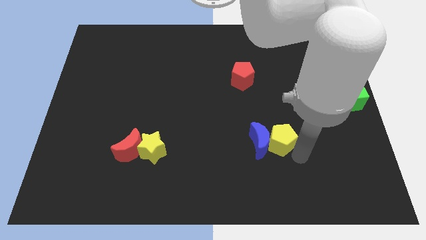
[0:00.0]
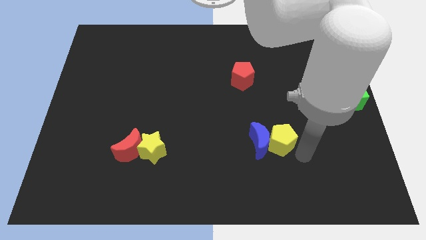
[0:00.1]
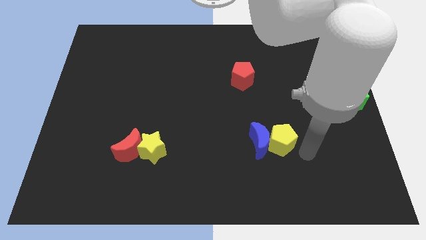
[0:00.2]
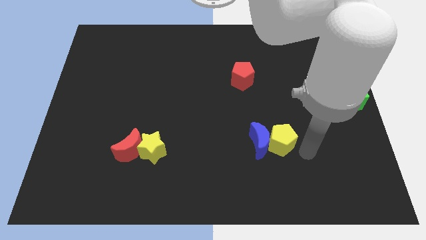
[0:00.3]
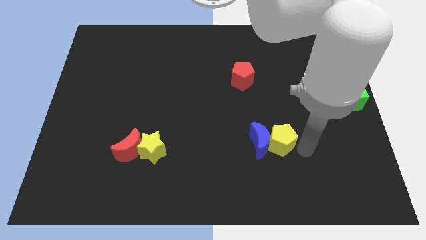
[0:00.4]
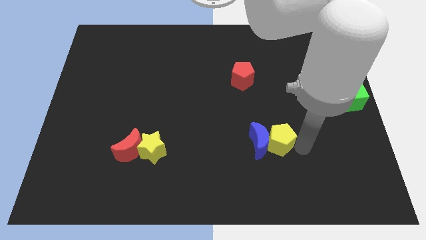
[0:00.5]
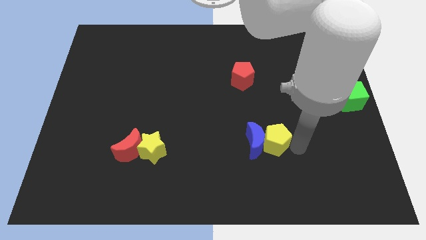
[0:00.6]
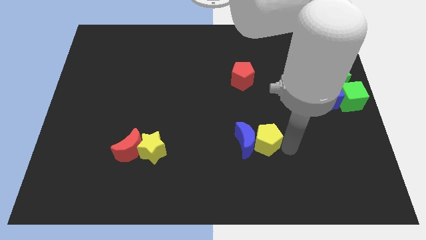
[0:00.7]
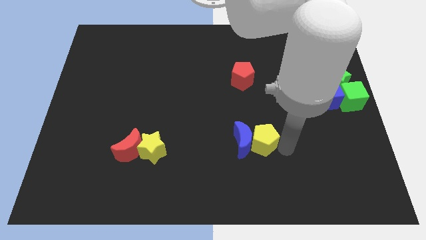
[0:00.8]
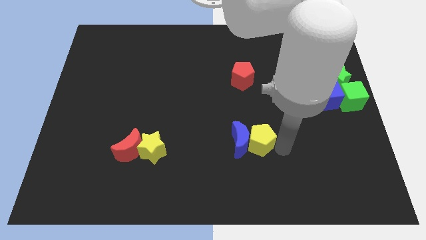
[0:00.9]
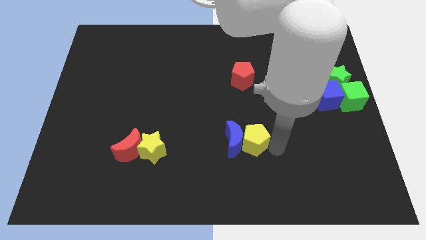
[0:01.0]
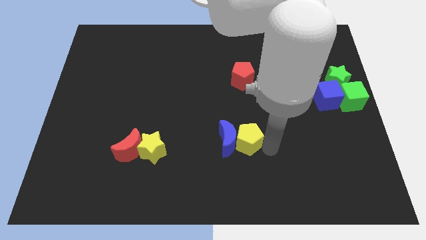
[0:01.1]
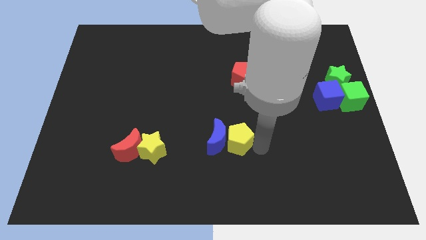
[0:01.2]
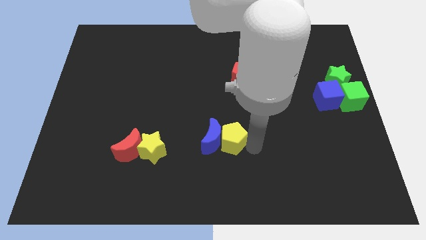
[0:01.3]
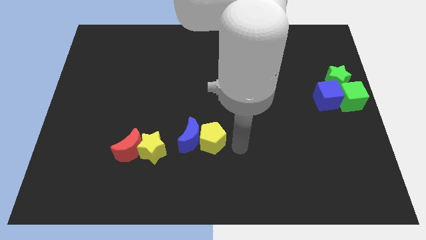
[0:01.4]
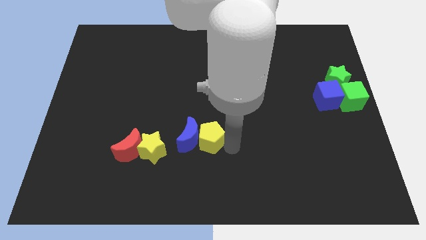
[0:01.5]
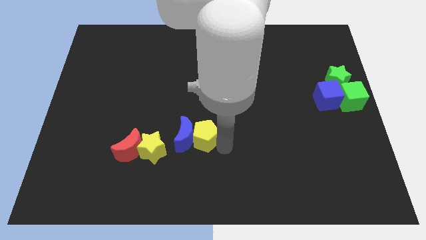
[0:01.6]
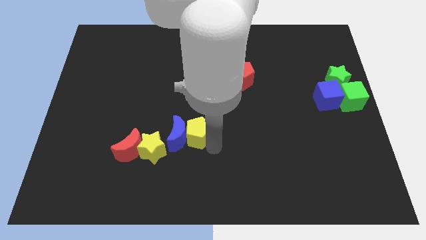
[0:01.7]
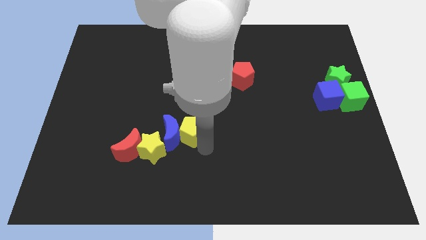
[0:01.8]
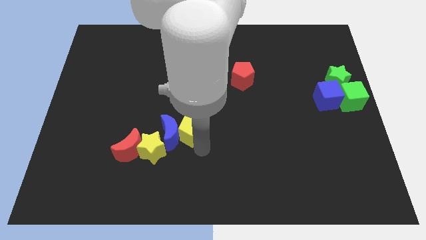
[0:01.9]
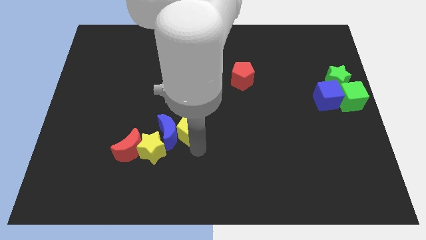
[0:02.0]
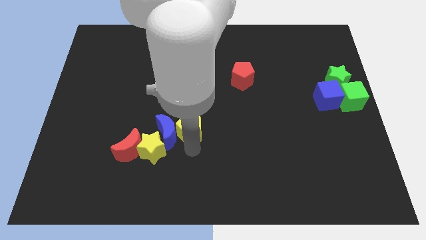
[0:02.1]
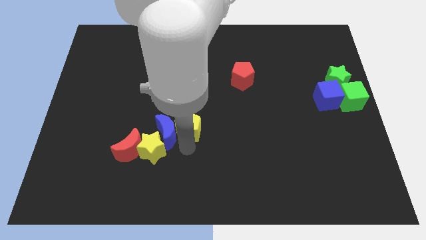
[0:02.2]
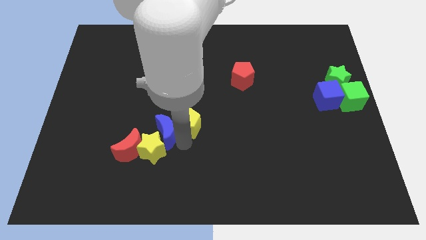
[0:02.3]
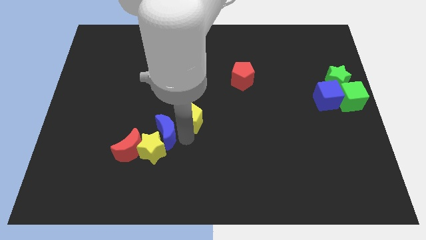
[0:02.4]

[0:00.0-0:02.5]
move the yellow pentagon along with the blue crescent to the top right of the yellow star

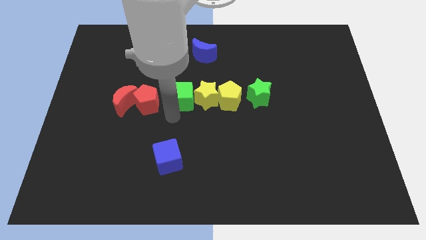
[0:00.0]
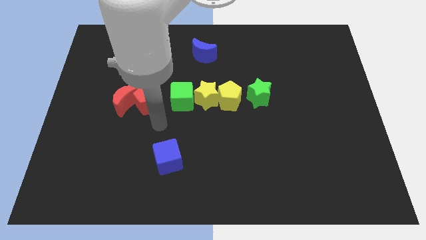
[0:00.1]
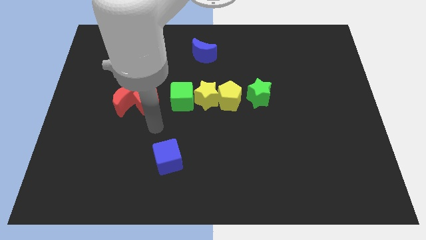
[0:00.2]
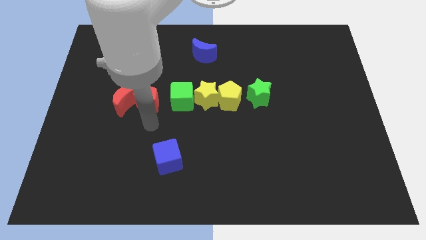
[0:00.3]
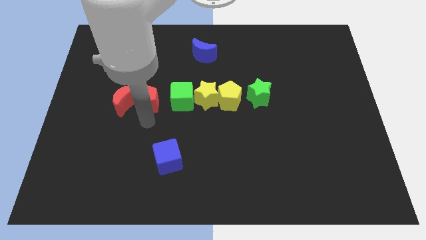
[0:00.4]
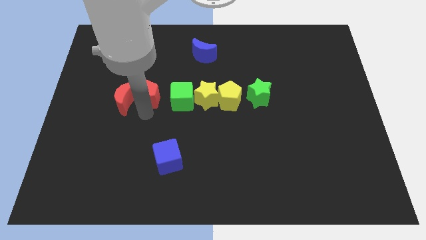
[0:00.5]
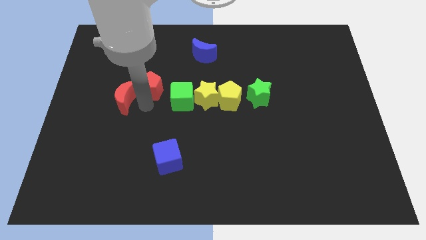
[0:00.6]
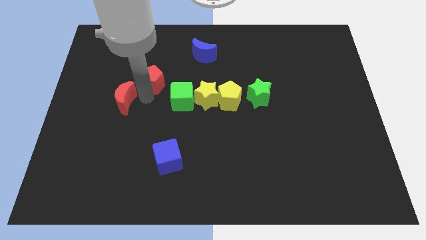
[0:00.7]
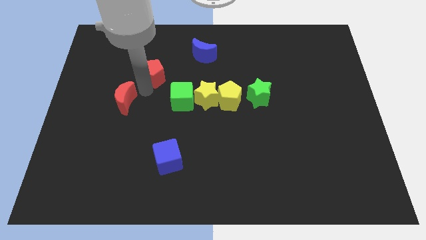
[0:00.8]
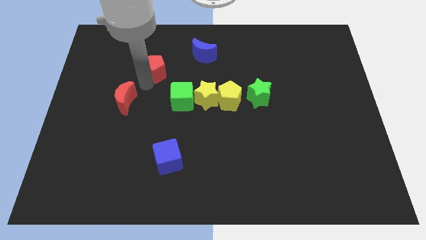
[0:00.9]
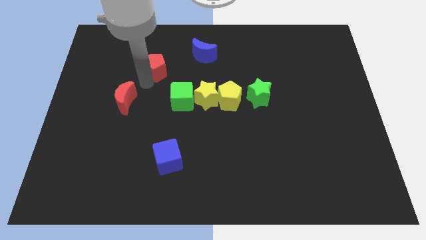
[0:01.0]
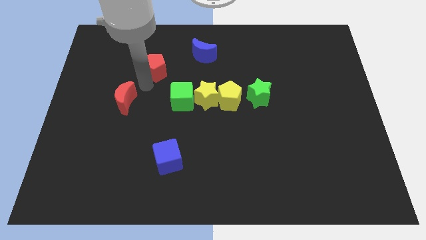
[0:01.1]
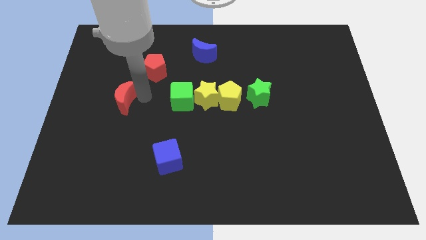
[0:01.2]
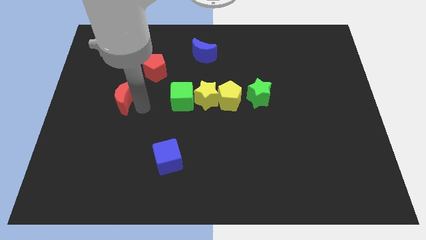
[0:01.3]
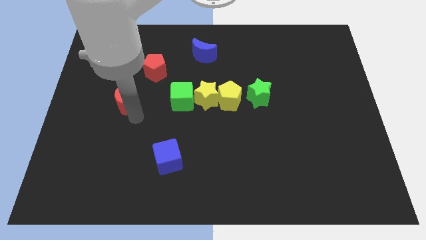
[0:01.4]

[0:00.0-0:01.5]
push the red pentagon upwards

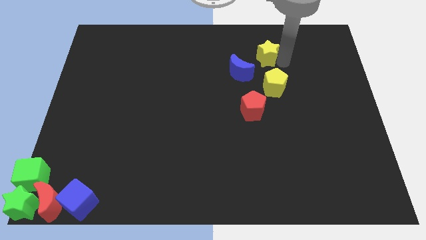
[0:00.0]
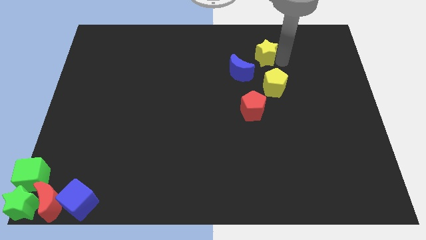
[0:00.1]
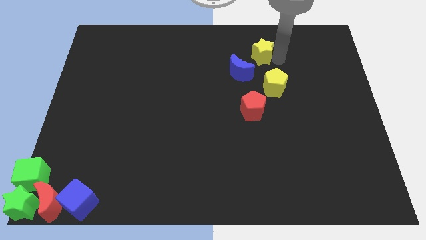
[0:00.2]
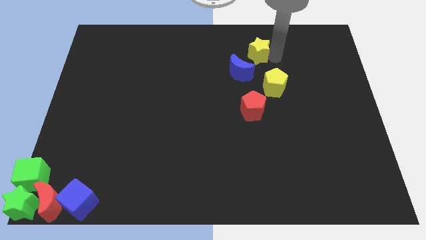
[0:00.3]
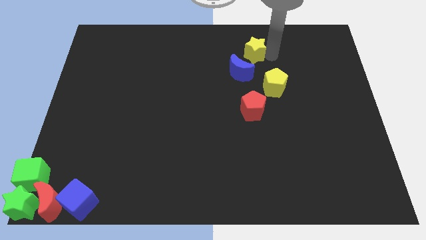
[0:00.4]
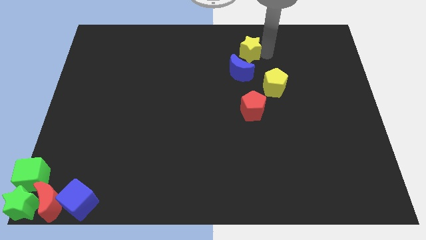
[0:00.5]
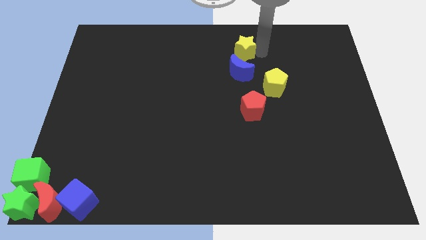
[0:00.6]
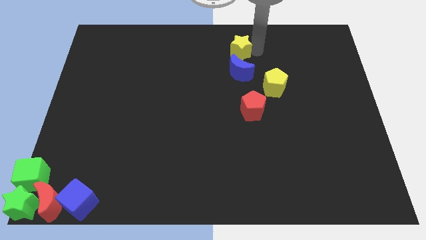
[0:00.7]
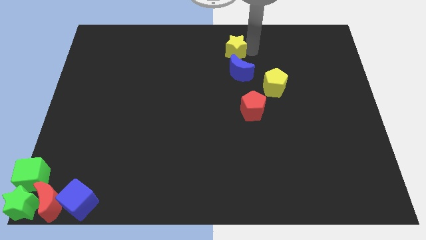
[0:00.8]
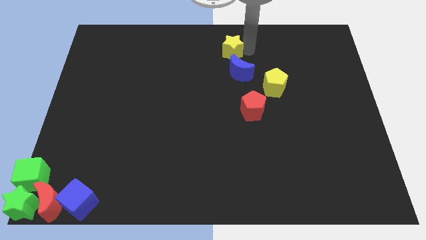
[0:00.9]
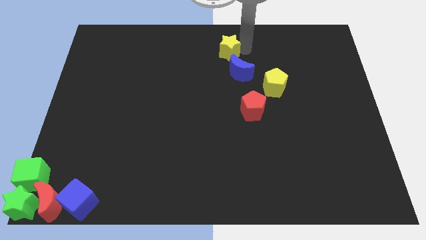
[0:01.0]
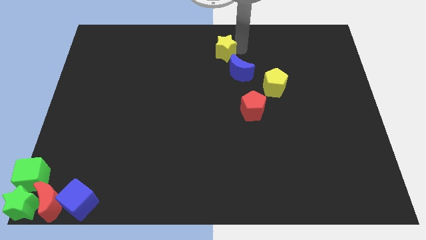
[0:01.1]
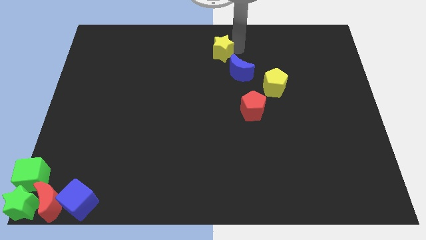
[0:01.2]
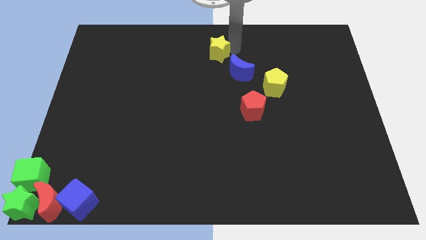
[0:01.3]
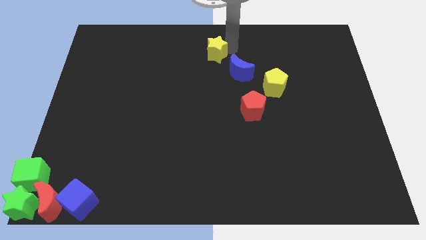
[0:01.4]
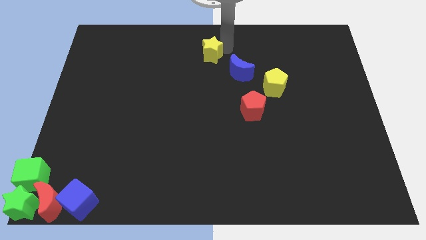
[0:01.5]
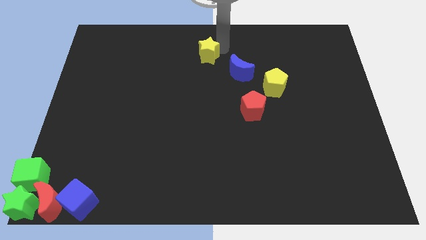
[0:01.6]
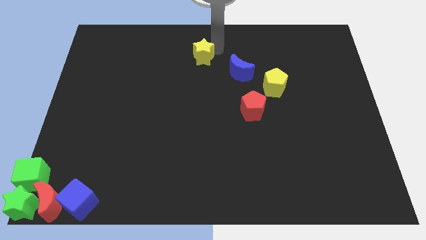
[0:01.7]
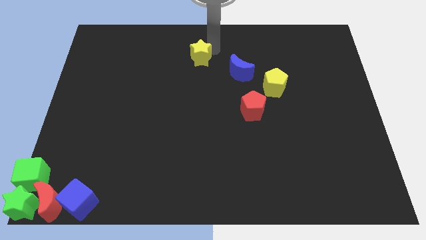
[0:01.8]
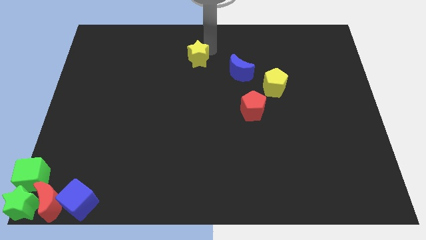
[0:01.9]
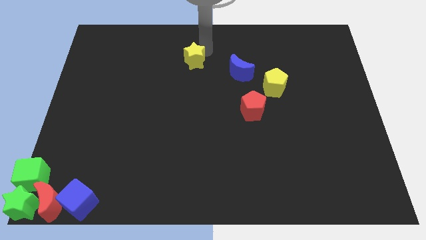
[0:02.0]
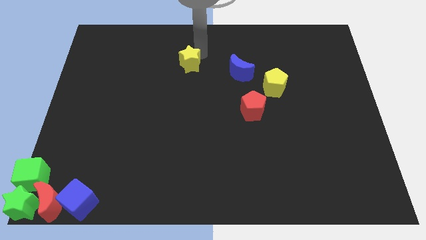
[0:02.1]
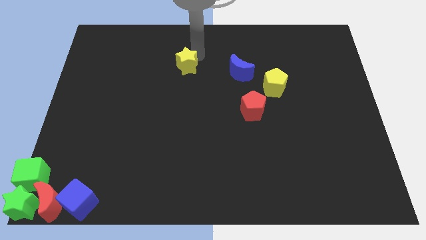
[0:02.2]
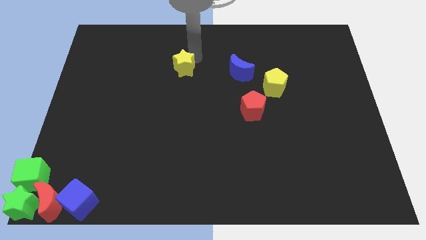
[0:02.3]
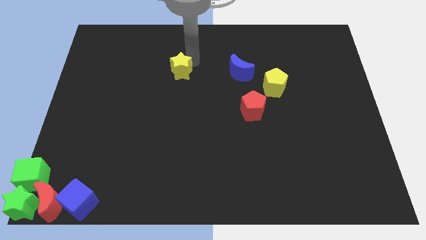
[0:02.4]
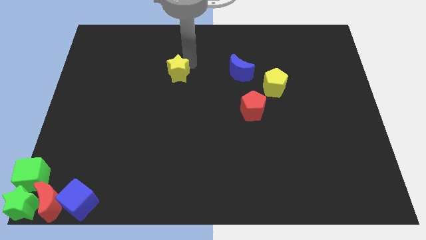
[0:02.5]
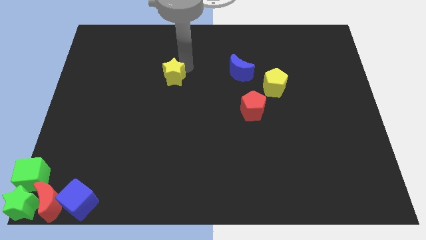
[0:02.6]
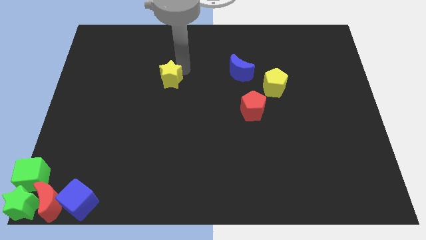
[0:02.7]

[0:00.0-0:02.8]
move the yellow star to the left of the blue crescent

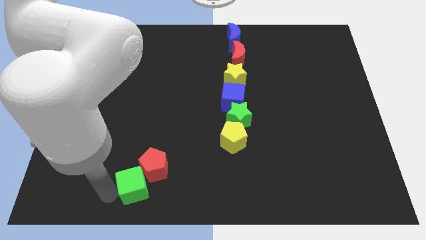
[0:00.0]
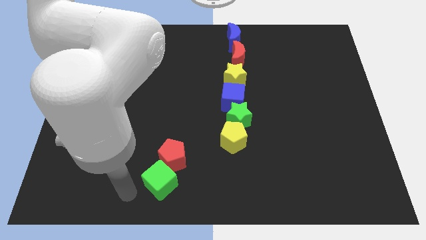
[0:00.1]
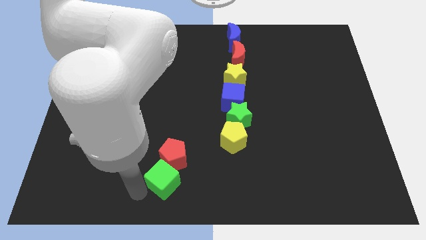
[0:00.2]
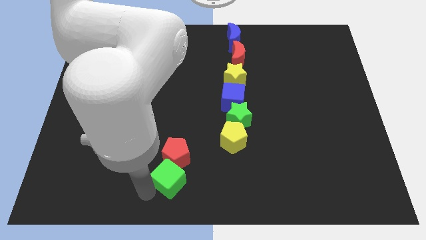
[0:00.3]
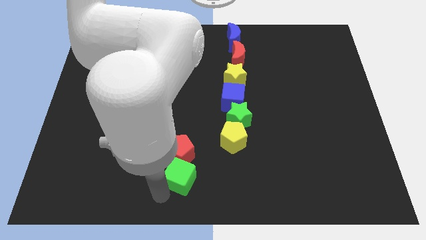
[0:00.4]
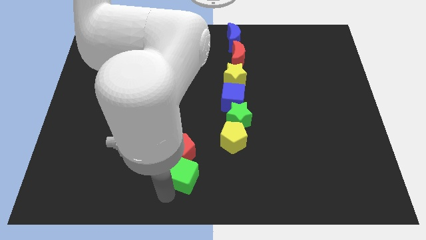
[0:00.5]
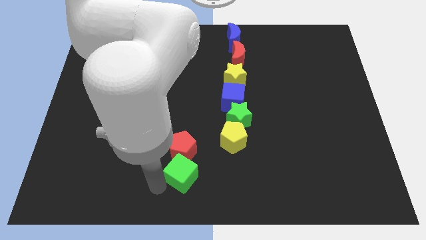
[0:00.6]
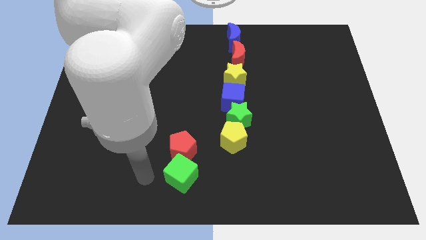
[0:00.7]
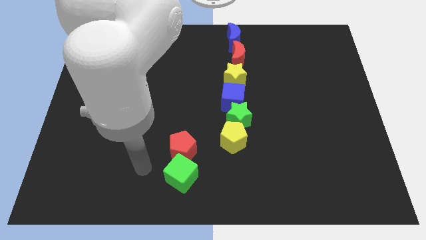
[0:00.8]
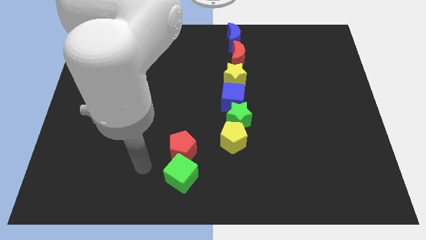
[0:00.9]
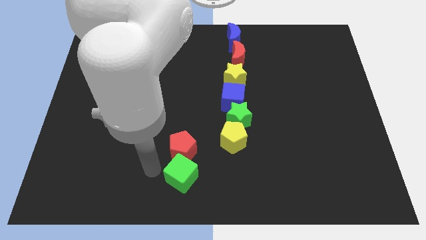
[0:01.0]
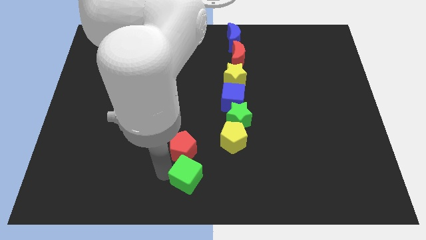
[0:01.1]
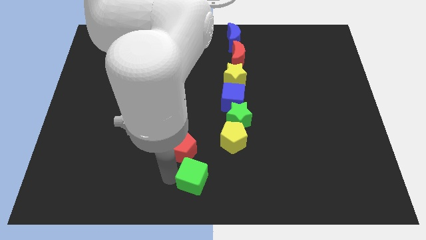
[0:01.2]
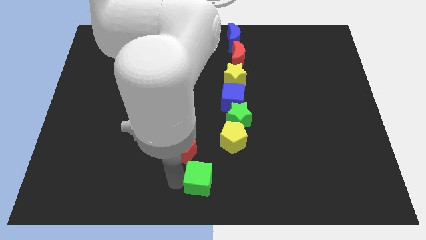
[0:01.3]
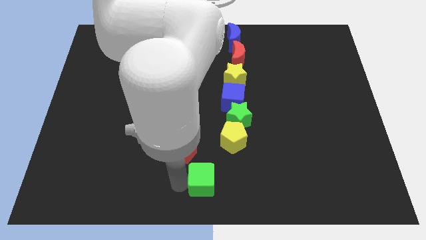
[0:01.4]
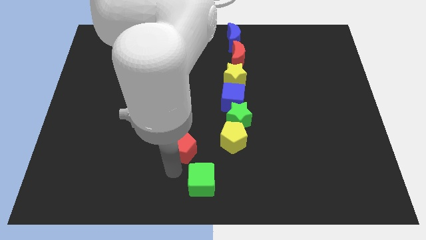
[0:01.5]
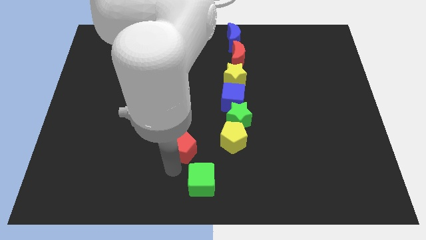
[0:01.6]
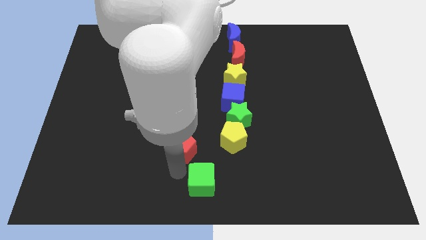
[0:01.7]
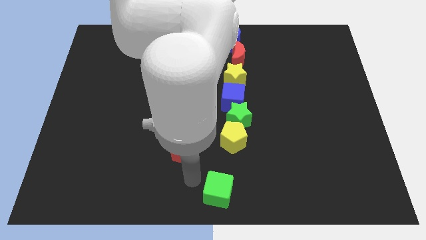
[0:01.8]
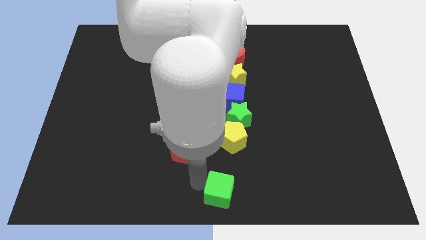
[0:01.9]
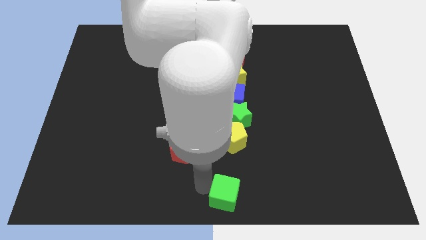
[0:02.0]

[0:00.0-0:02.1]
separate the green cube and red pentagon

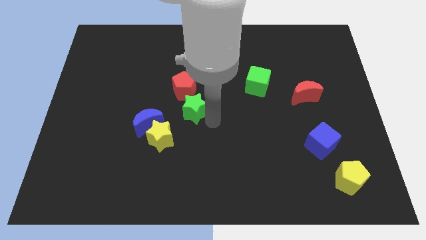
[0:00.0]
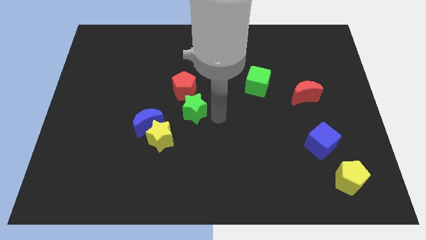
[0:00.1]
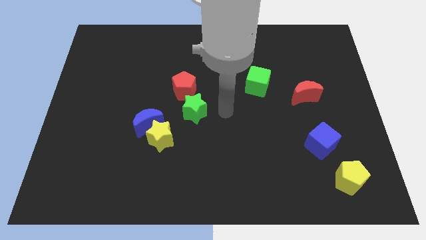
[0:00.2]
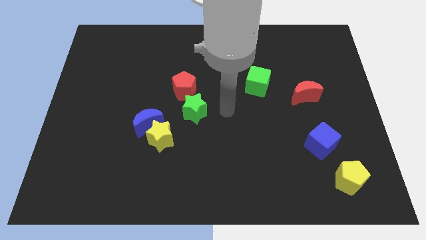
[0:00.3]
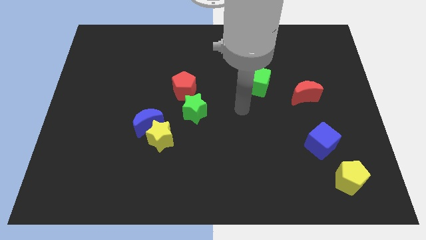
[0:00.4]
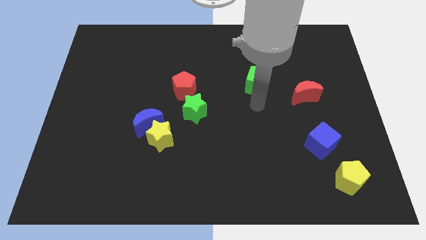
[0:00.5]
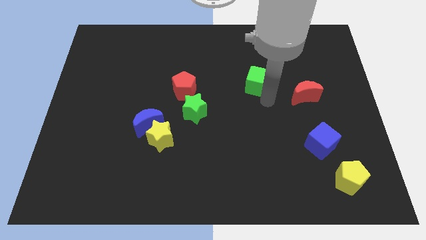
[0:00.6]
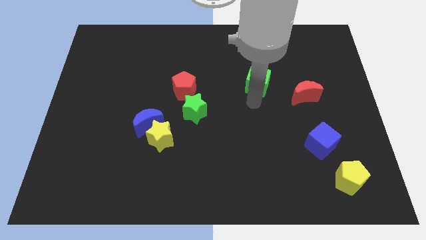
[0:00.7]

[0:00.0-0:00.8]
point your arm at the bottom of green cube
